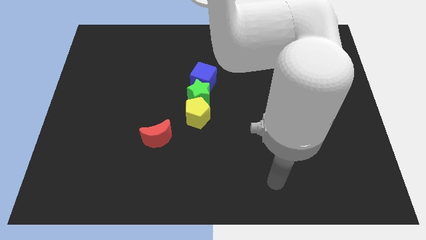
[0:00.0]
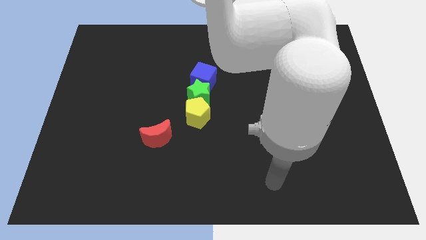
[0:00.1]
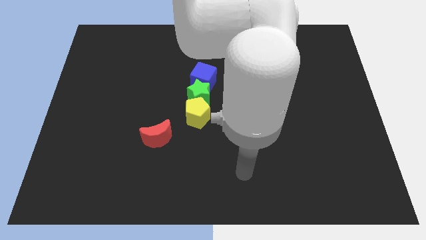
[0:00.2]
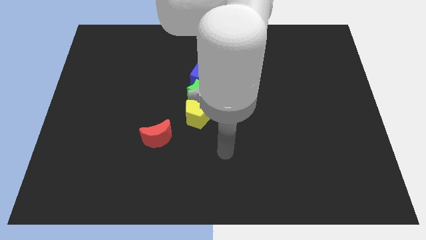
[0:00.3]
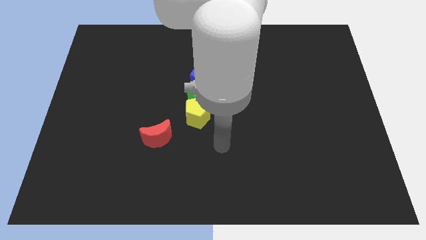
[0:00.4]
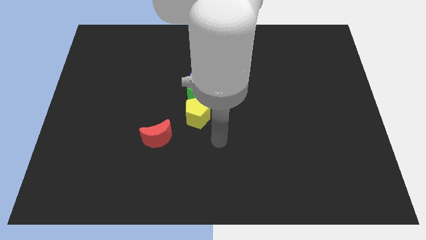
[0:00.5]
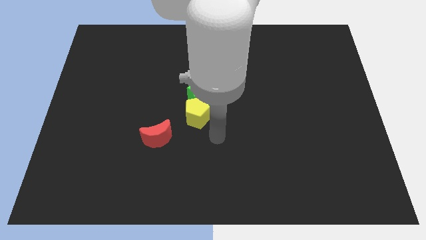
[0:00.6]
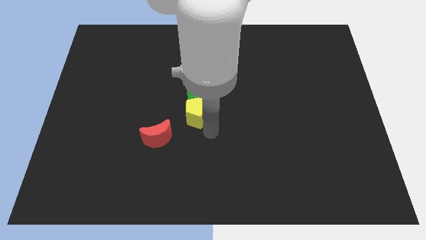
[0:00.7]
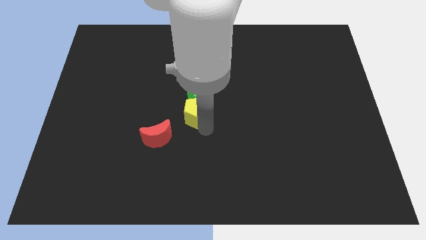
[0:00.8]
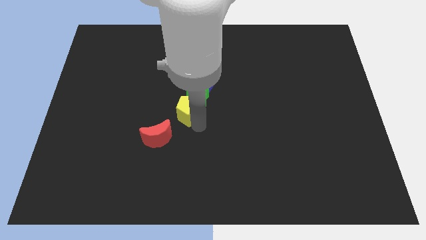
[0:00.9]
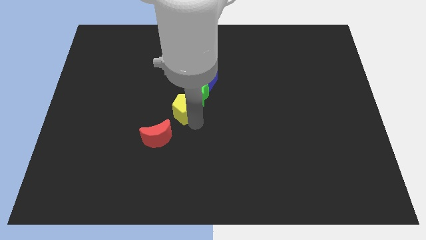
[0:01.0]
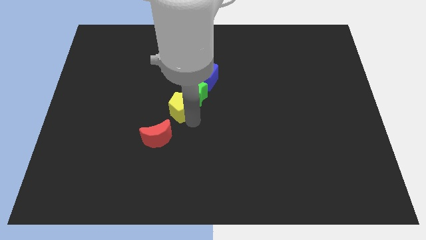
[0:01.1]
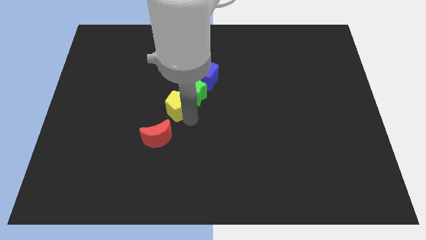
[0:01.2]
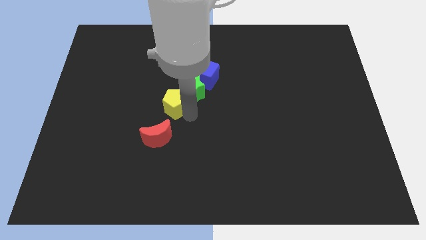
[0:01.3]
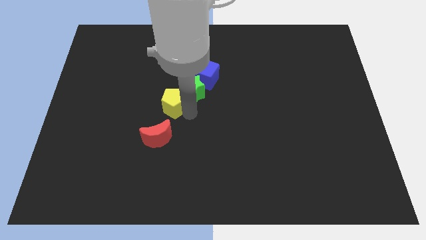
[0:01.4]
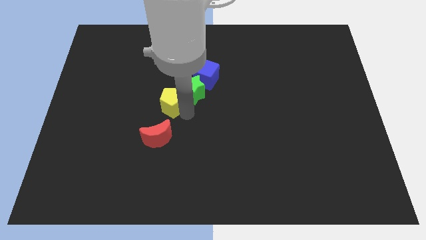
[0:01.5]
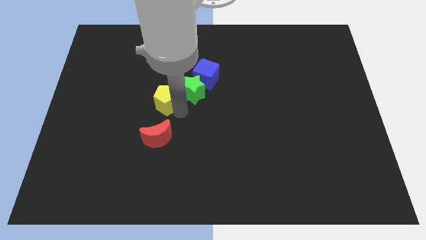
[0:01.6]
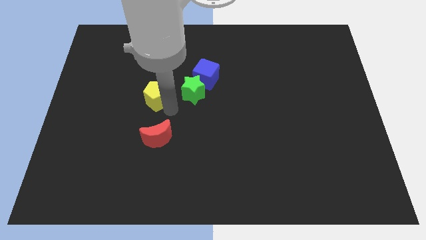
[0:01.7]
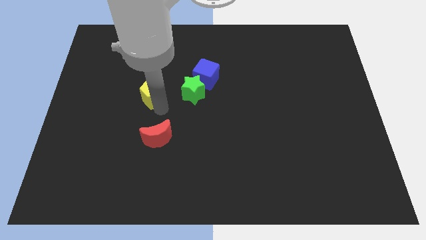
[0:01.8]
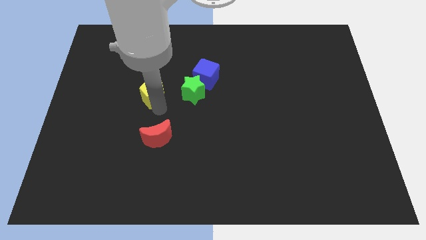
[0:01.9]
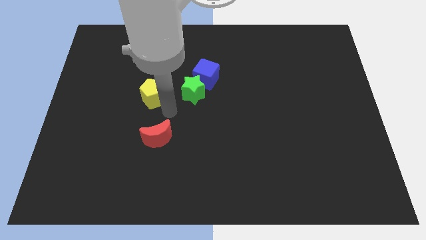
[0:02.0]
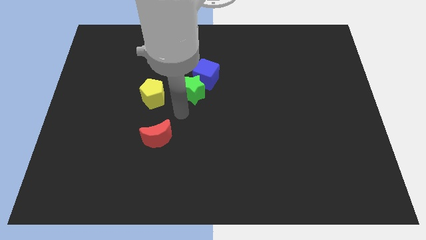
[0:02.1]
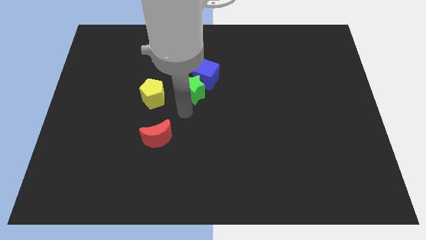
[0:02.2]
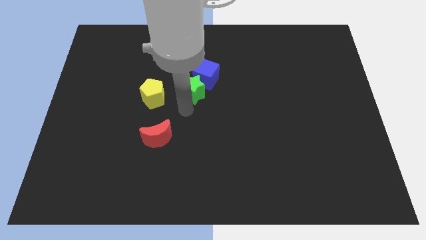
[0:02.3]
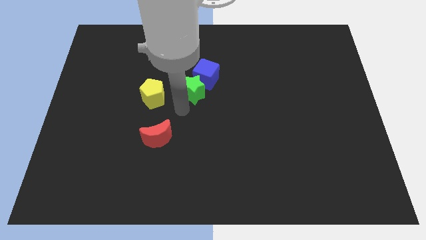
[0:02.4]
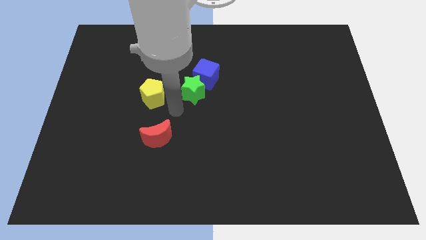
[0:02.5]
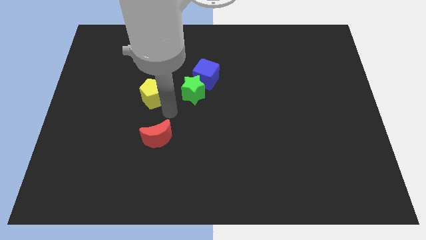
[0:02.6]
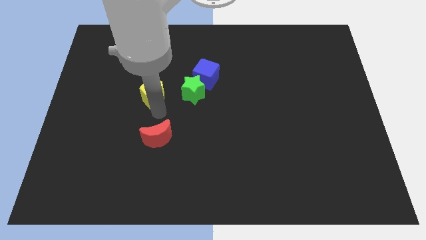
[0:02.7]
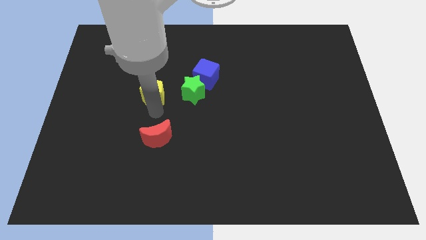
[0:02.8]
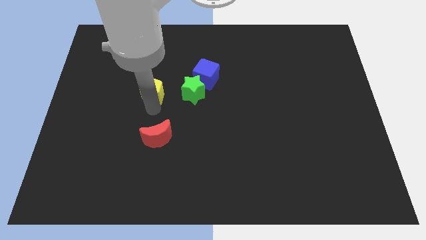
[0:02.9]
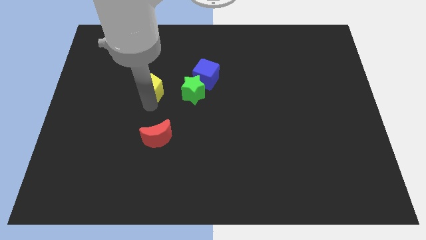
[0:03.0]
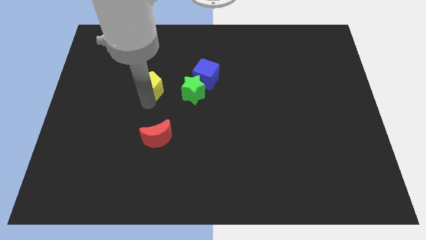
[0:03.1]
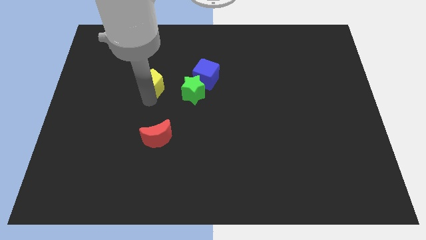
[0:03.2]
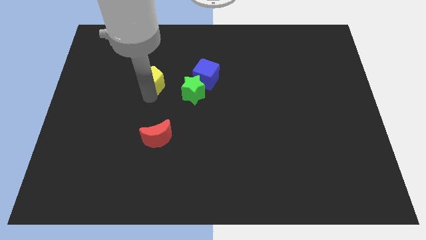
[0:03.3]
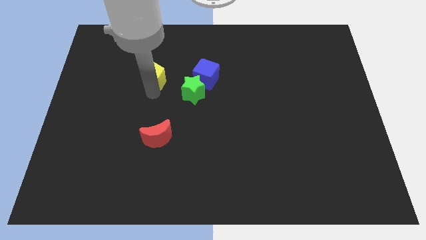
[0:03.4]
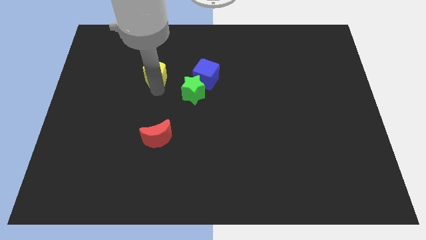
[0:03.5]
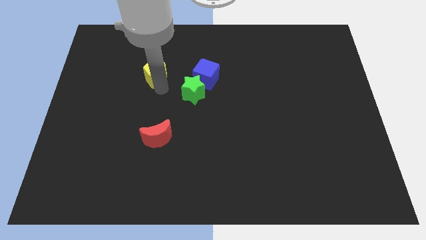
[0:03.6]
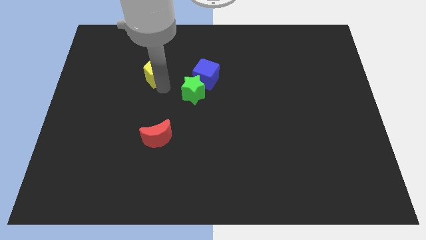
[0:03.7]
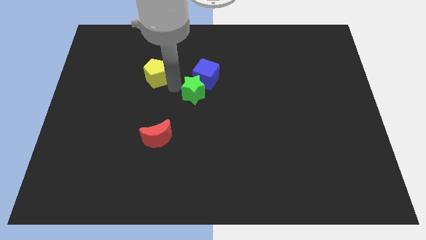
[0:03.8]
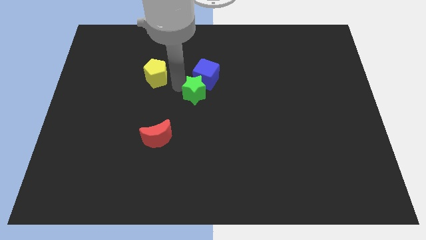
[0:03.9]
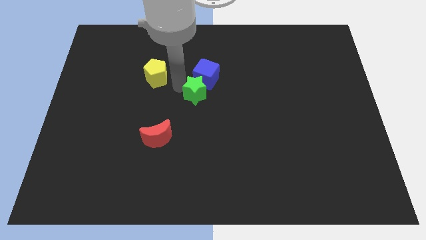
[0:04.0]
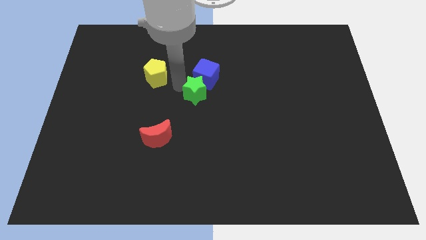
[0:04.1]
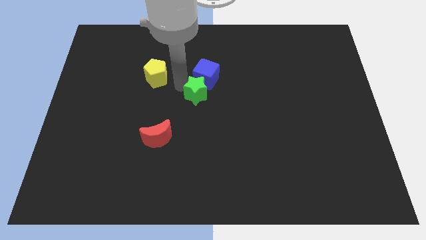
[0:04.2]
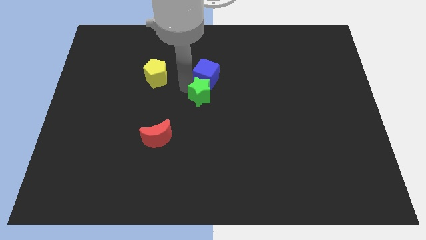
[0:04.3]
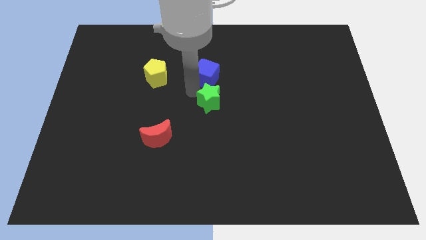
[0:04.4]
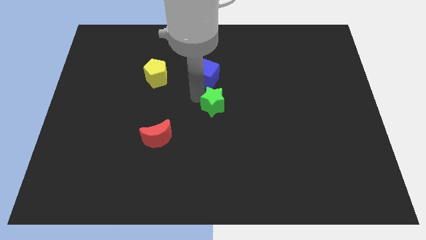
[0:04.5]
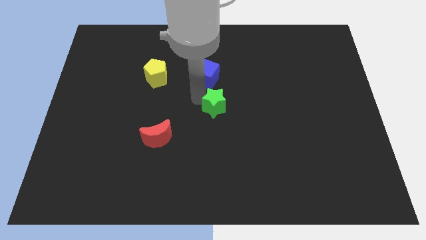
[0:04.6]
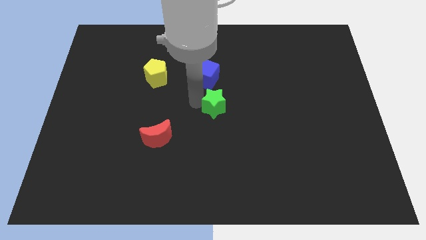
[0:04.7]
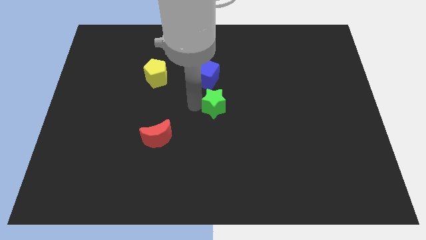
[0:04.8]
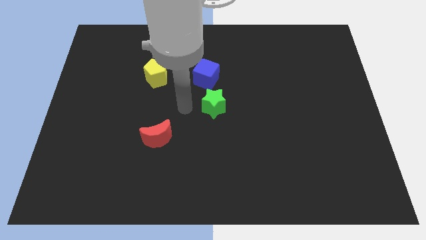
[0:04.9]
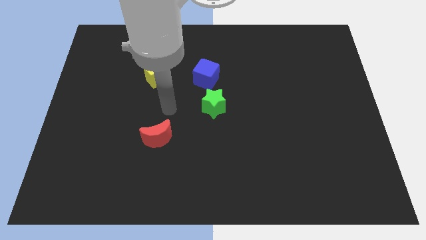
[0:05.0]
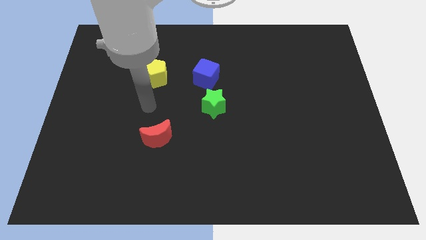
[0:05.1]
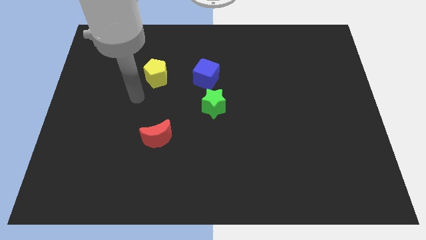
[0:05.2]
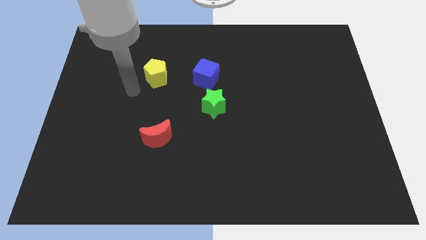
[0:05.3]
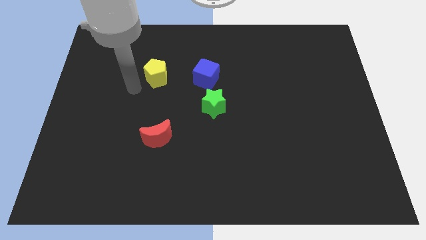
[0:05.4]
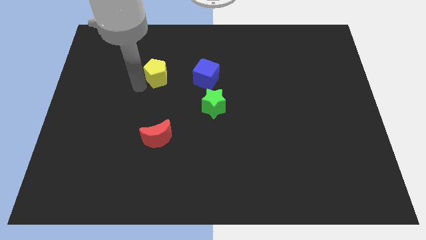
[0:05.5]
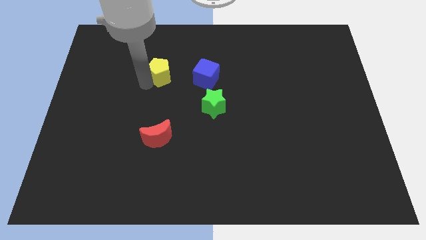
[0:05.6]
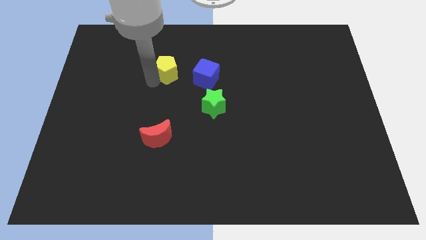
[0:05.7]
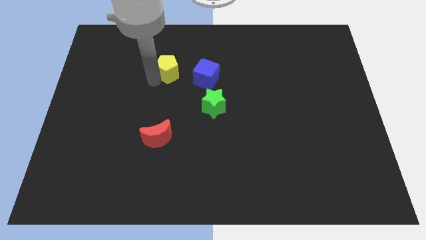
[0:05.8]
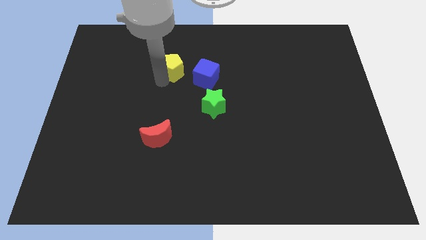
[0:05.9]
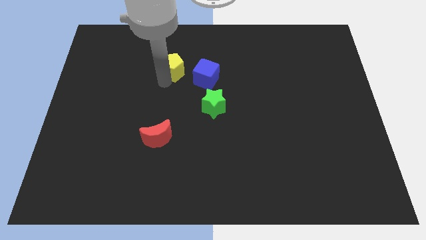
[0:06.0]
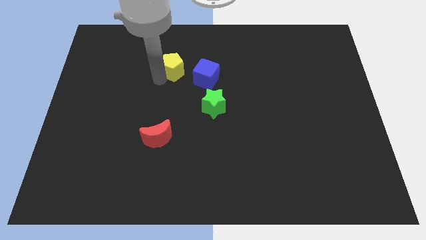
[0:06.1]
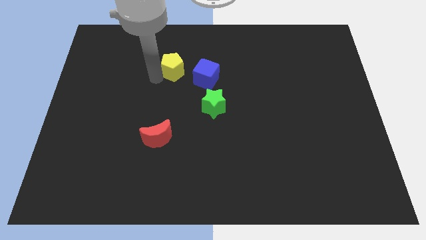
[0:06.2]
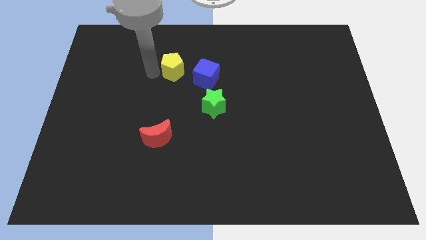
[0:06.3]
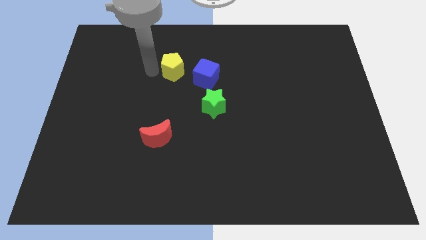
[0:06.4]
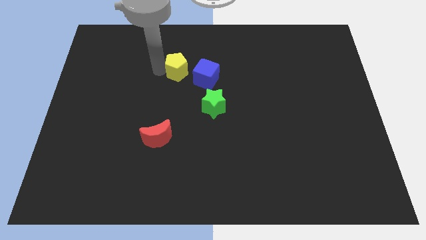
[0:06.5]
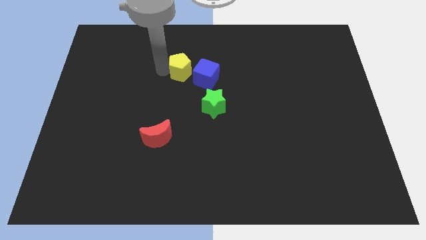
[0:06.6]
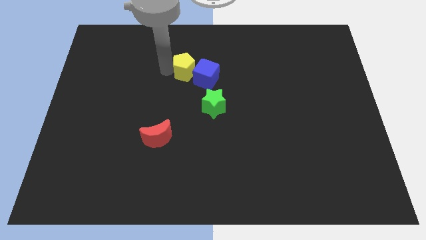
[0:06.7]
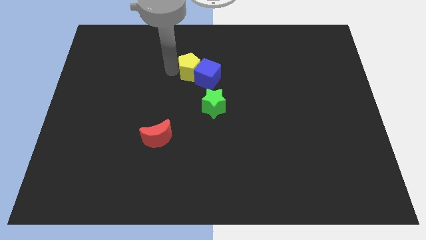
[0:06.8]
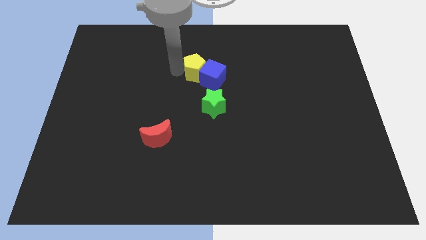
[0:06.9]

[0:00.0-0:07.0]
put the pentagon towards the blue cube

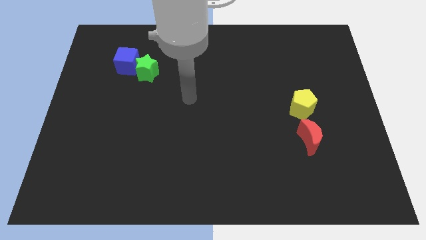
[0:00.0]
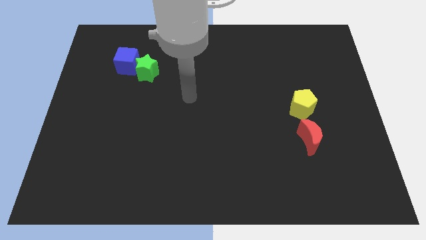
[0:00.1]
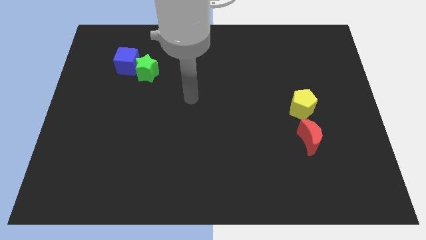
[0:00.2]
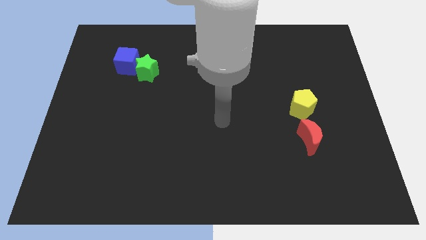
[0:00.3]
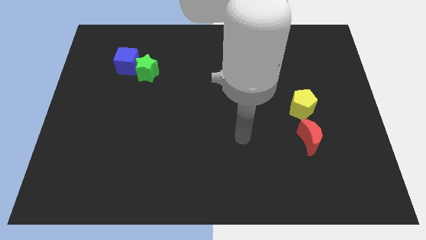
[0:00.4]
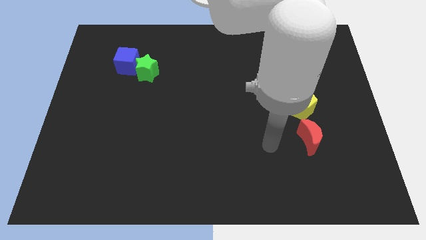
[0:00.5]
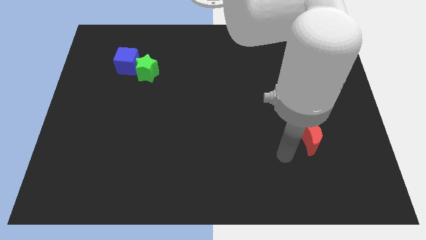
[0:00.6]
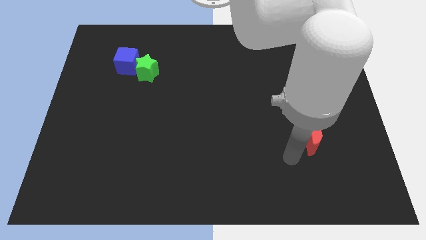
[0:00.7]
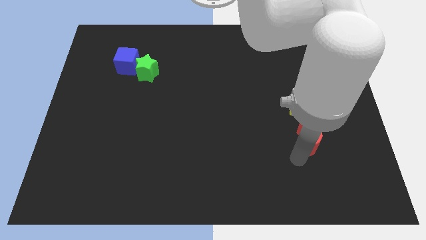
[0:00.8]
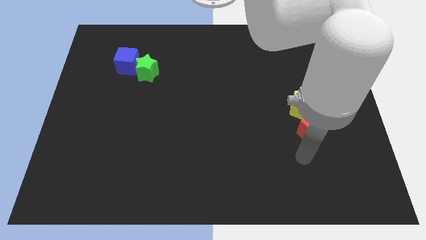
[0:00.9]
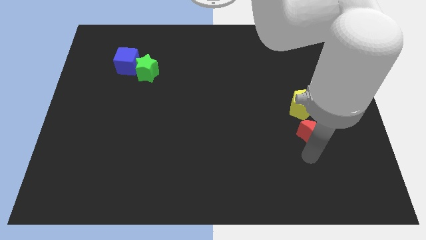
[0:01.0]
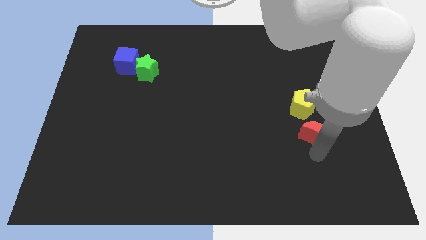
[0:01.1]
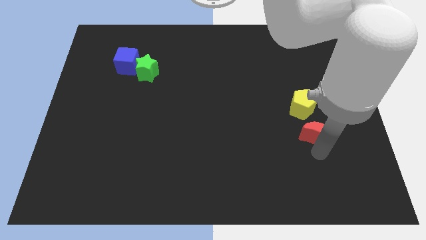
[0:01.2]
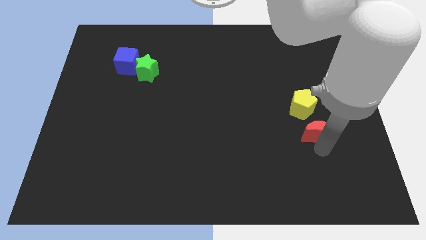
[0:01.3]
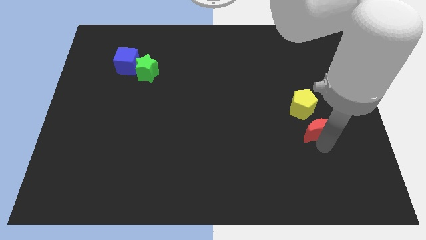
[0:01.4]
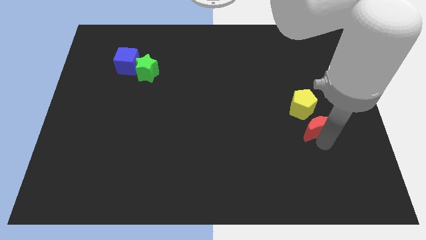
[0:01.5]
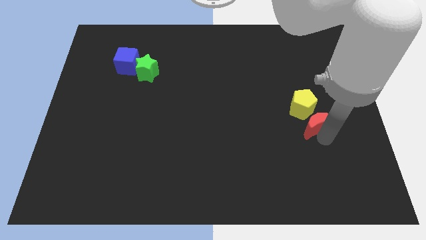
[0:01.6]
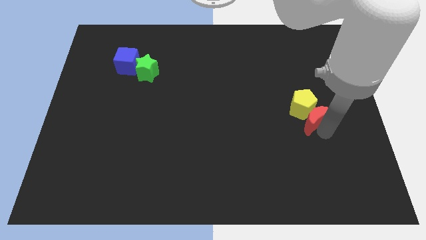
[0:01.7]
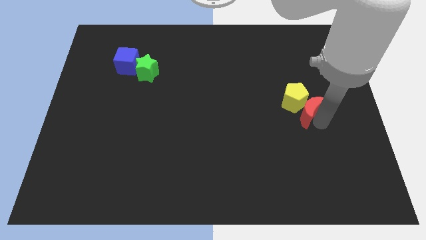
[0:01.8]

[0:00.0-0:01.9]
put the red block towards the yellow pentagon
